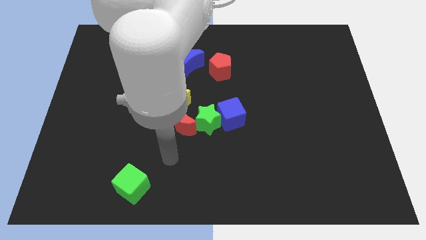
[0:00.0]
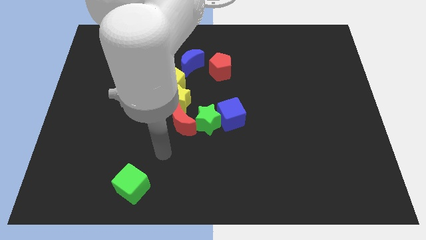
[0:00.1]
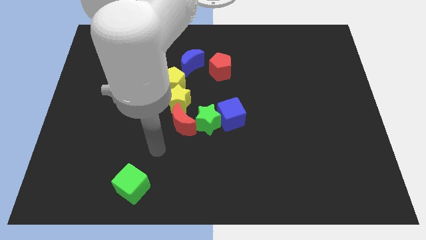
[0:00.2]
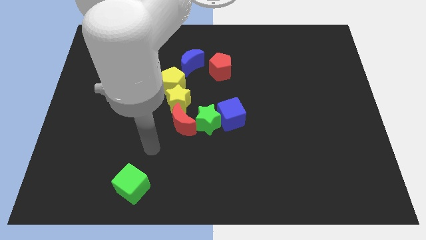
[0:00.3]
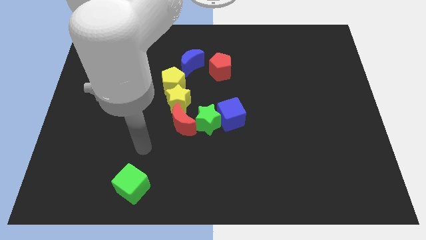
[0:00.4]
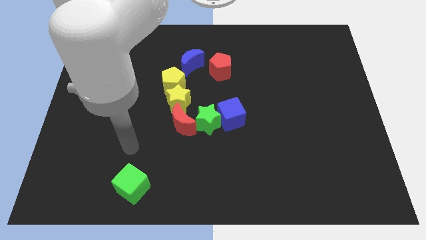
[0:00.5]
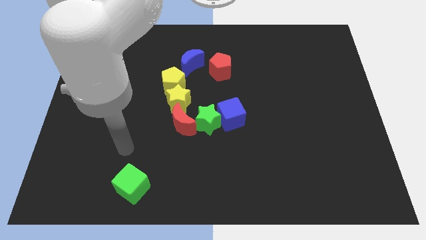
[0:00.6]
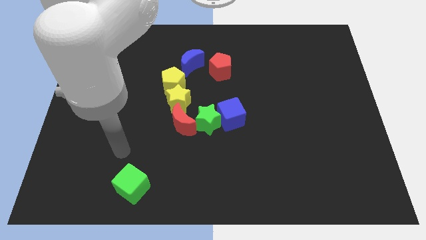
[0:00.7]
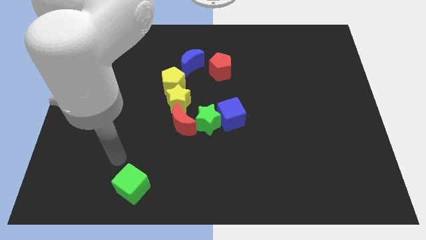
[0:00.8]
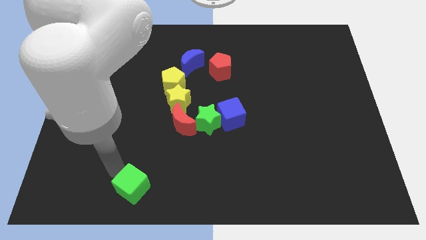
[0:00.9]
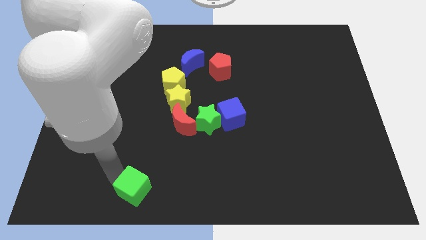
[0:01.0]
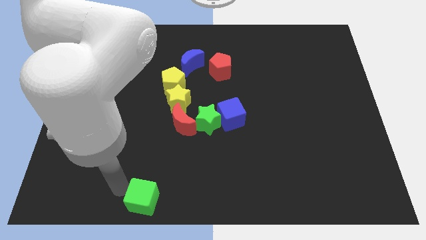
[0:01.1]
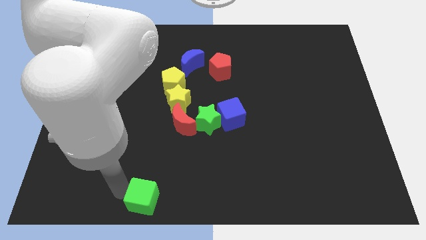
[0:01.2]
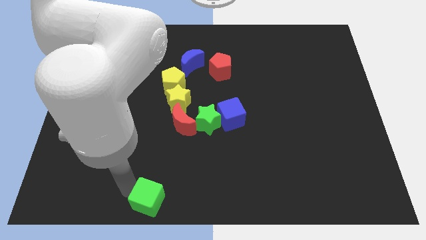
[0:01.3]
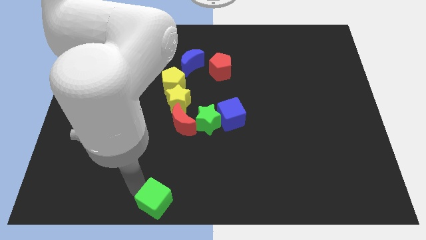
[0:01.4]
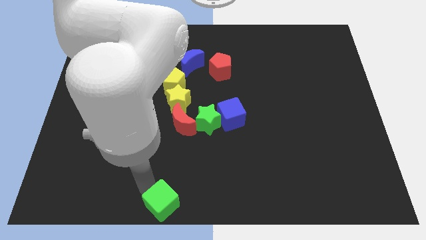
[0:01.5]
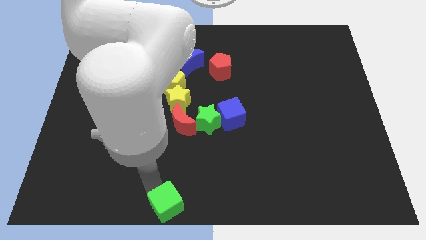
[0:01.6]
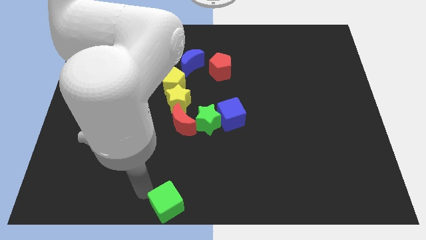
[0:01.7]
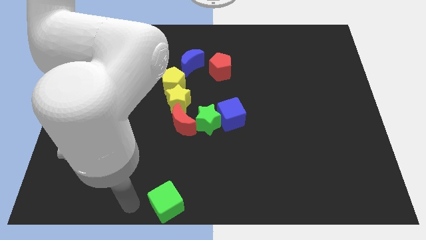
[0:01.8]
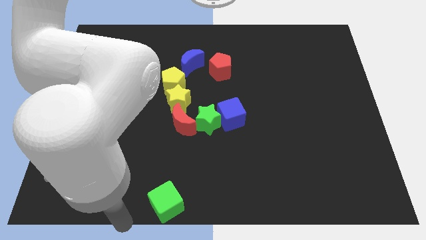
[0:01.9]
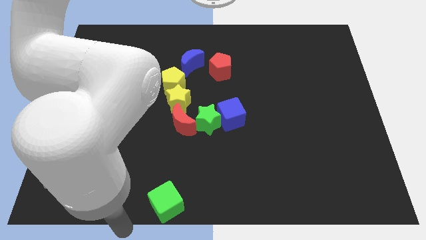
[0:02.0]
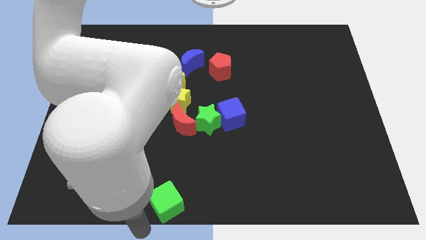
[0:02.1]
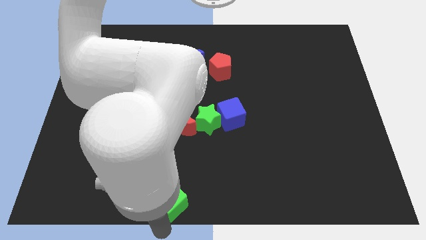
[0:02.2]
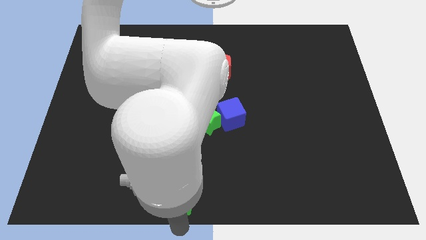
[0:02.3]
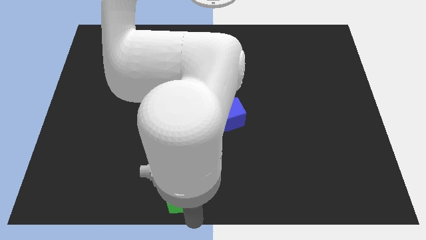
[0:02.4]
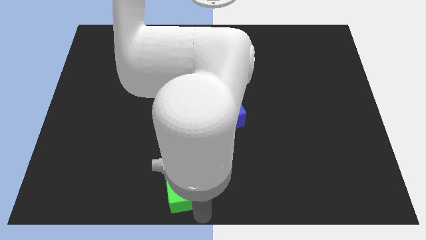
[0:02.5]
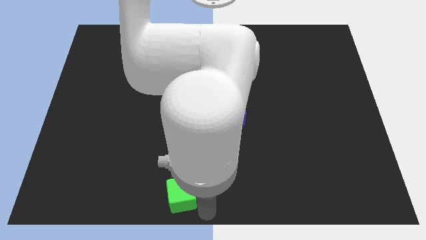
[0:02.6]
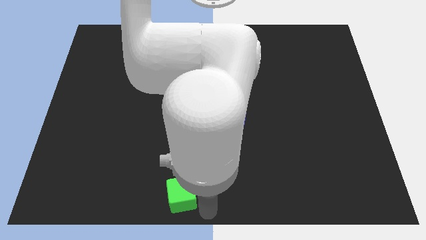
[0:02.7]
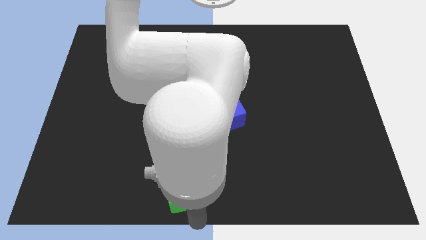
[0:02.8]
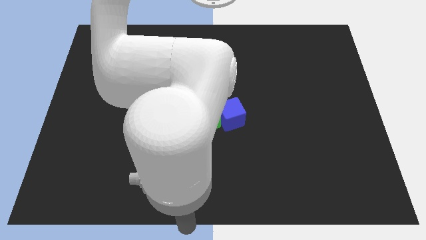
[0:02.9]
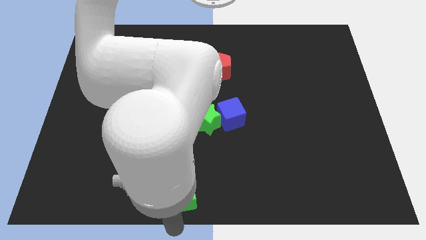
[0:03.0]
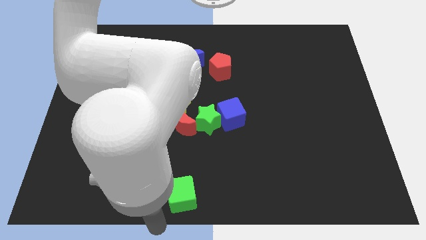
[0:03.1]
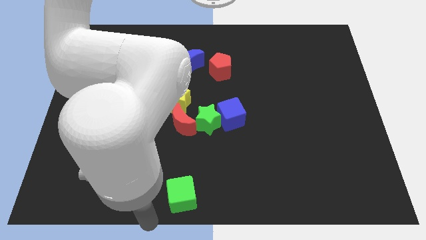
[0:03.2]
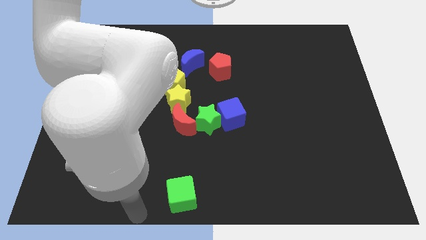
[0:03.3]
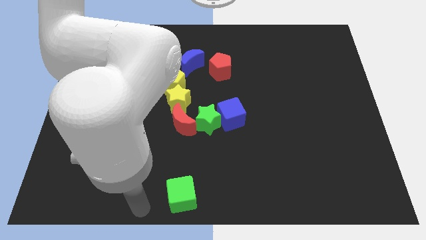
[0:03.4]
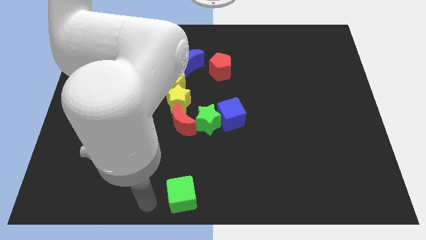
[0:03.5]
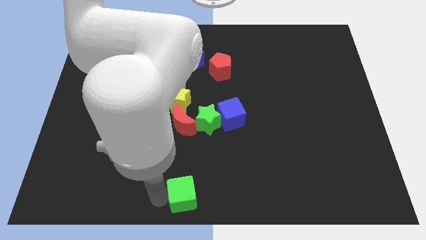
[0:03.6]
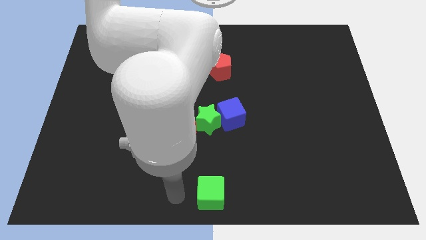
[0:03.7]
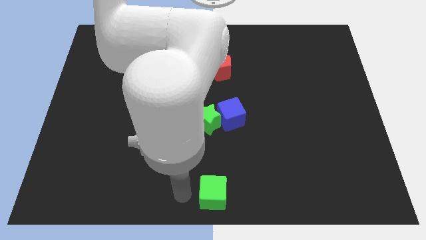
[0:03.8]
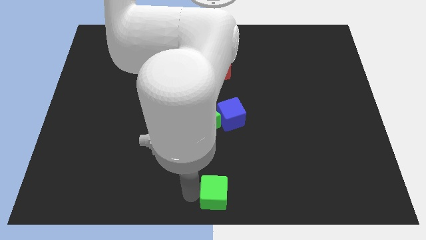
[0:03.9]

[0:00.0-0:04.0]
place green cube to the bottom of green star

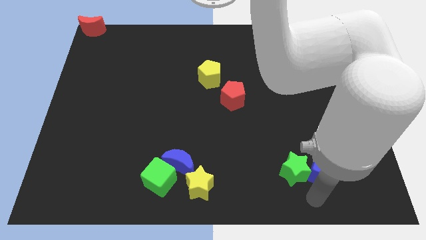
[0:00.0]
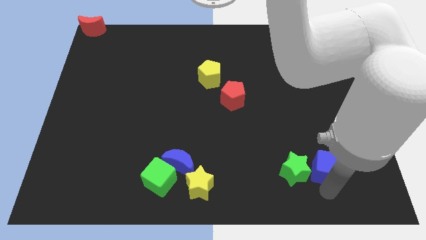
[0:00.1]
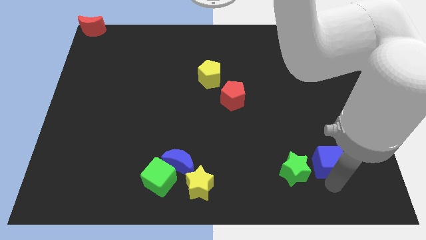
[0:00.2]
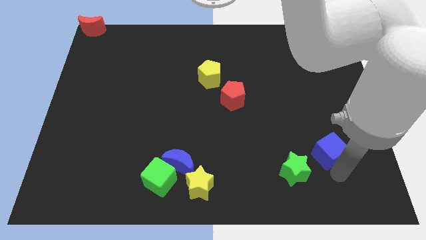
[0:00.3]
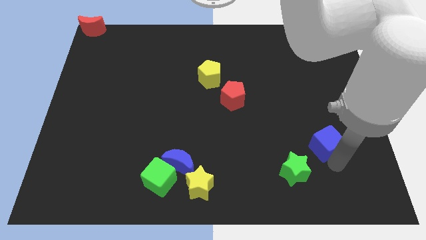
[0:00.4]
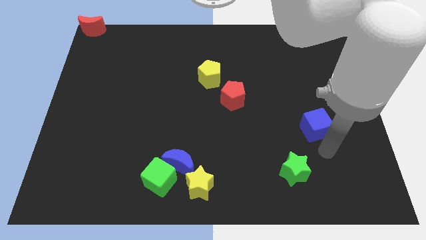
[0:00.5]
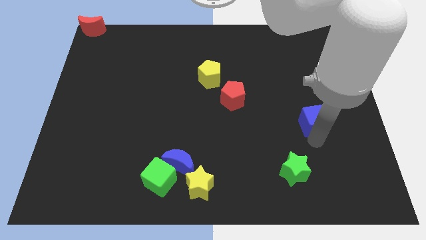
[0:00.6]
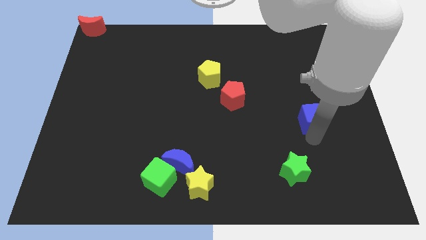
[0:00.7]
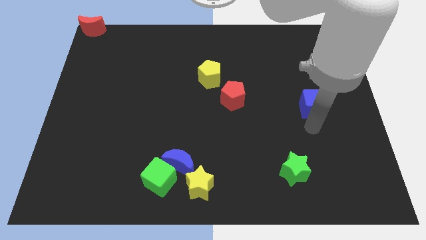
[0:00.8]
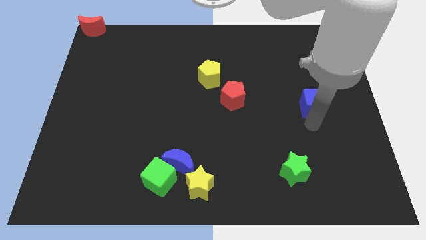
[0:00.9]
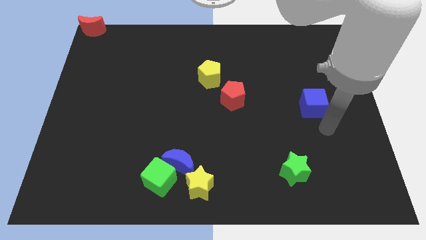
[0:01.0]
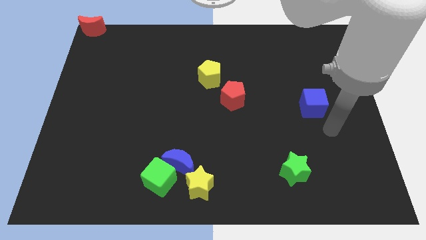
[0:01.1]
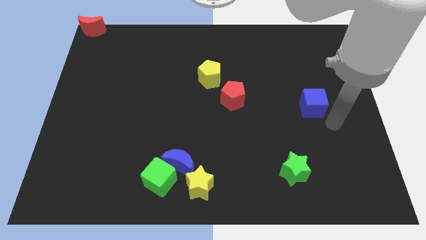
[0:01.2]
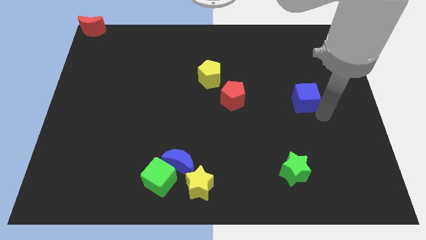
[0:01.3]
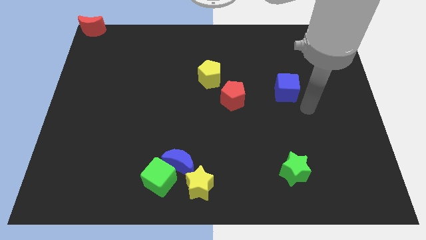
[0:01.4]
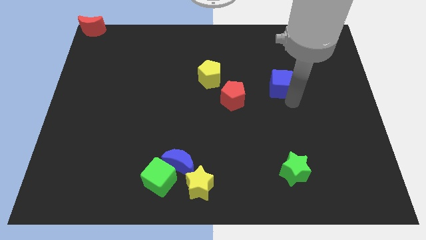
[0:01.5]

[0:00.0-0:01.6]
move the blue cube to the right of the red pentagon

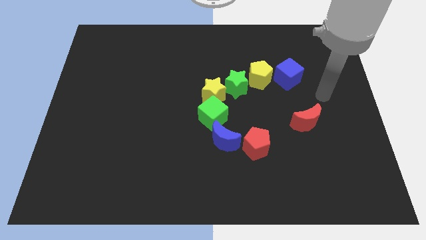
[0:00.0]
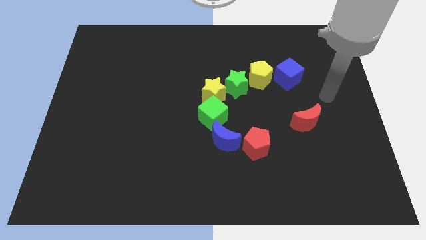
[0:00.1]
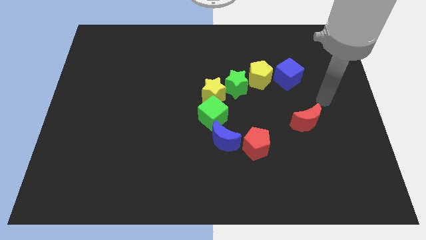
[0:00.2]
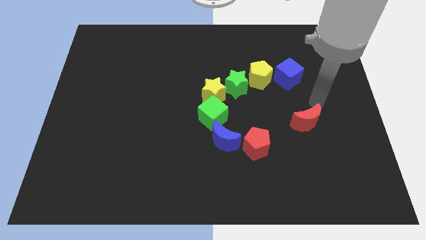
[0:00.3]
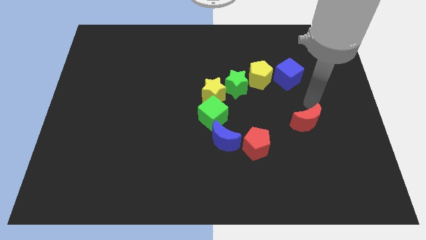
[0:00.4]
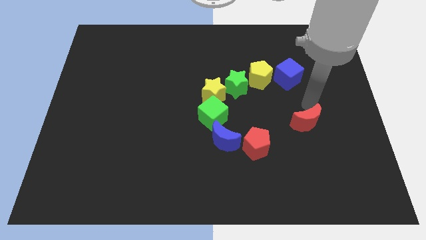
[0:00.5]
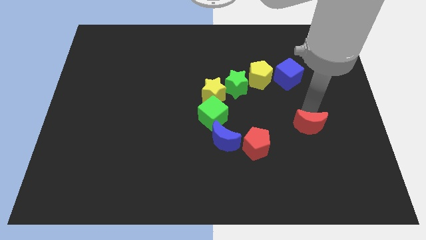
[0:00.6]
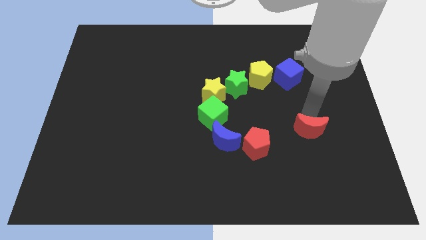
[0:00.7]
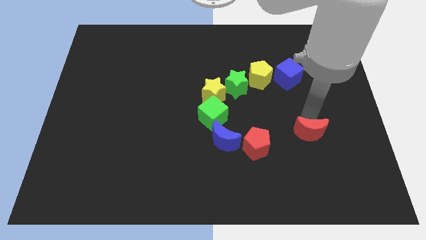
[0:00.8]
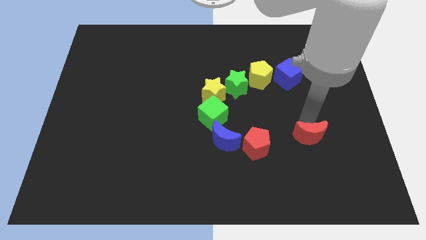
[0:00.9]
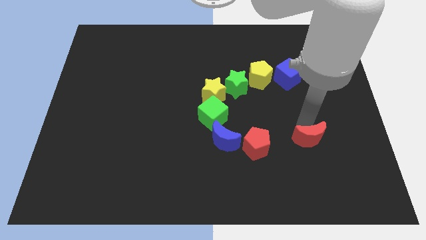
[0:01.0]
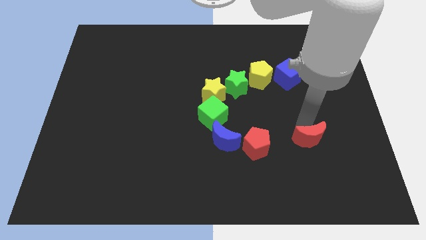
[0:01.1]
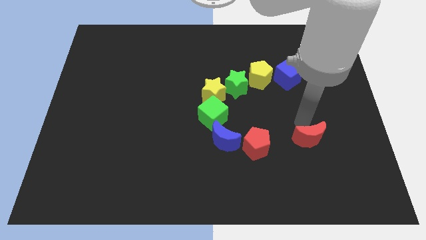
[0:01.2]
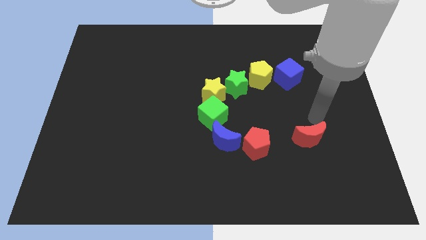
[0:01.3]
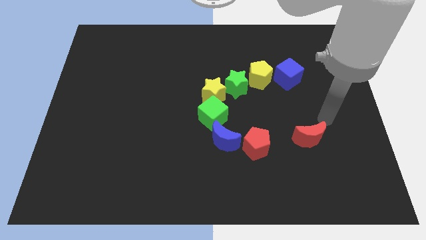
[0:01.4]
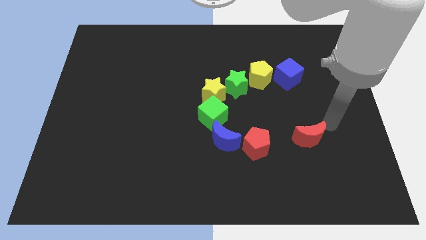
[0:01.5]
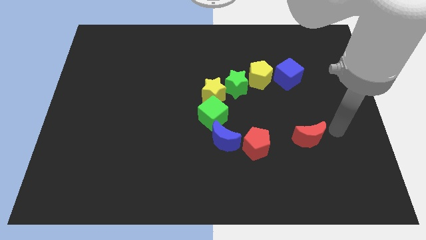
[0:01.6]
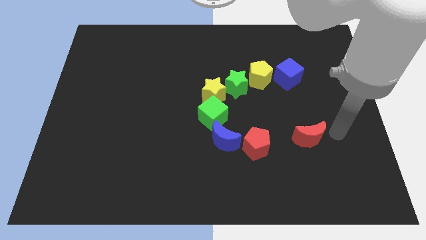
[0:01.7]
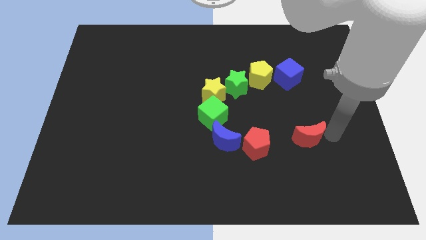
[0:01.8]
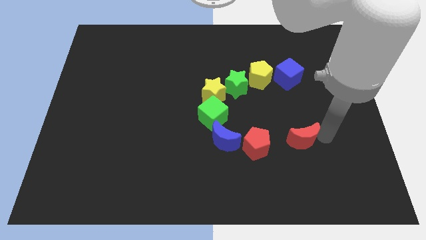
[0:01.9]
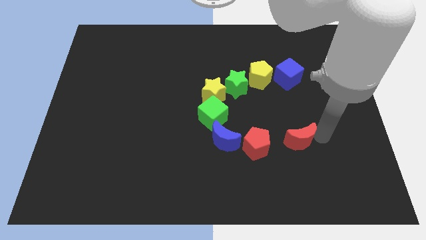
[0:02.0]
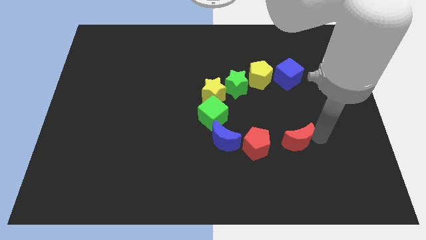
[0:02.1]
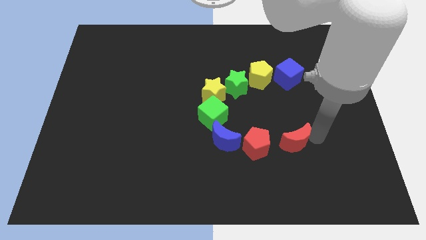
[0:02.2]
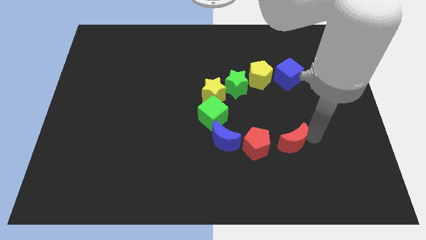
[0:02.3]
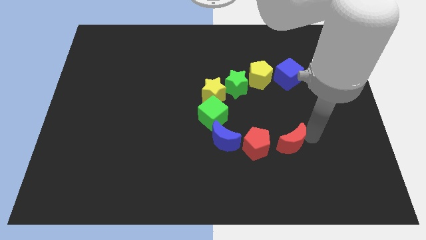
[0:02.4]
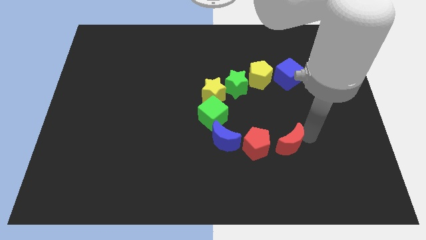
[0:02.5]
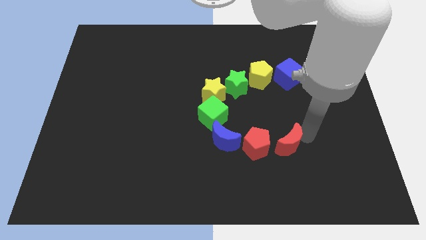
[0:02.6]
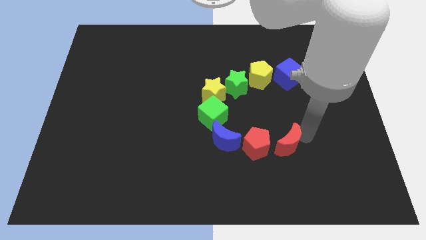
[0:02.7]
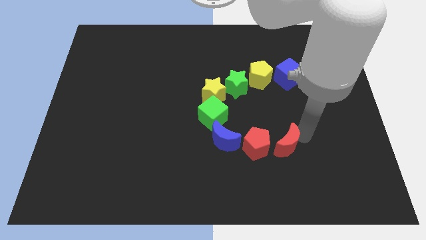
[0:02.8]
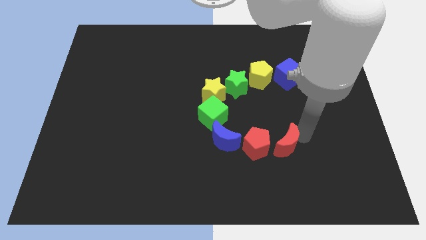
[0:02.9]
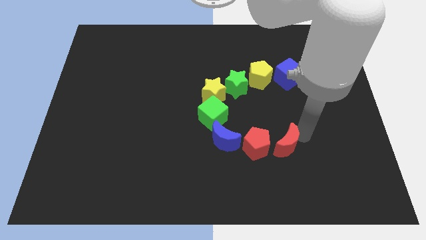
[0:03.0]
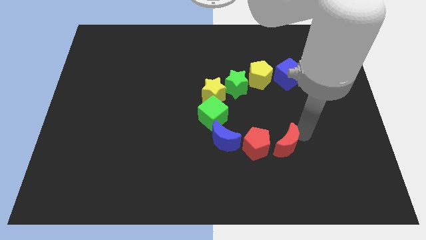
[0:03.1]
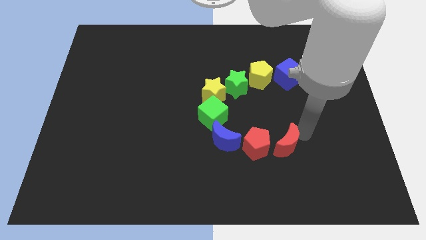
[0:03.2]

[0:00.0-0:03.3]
move the red moon right to the red pentagon
